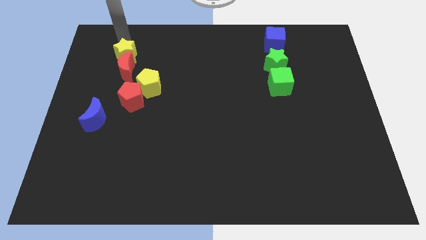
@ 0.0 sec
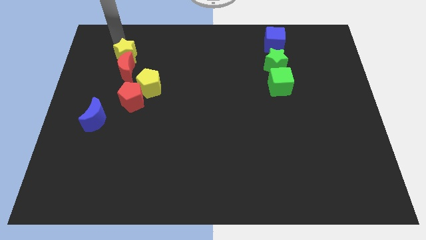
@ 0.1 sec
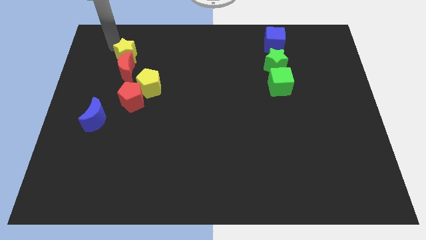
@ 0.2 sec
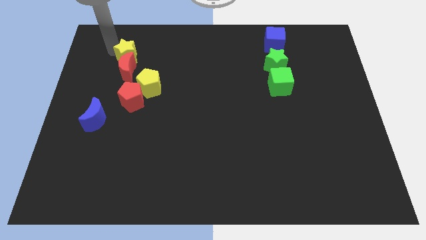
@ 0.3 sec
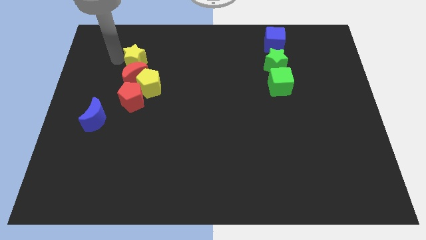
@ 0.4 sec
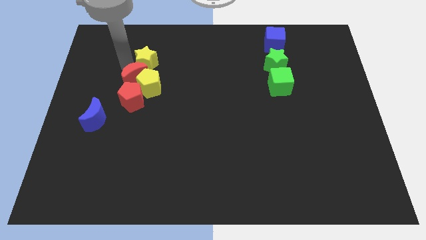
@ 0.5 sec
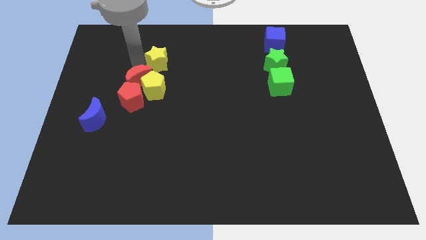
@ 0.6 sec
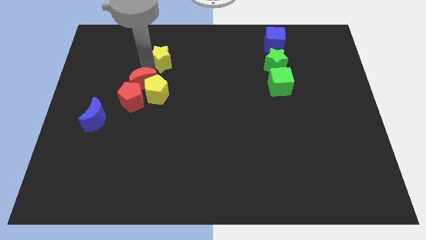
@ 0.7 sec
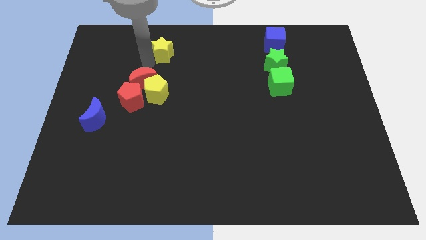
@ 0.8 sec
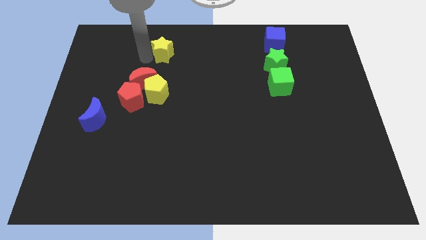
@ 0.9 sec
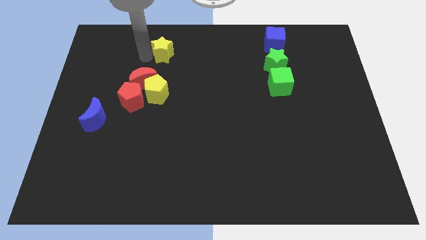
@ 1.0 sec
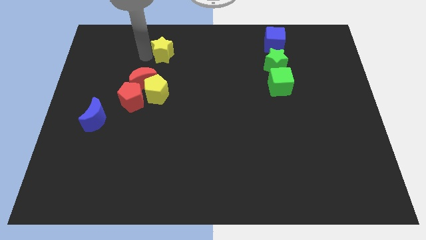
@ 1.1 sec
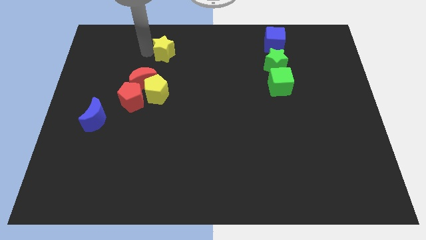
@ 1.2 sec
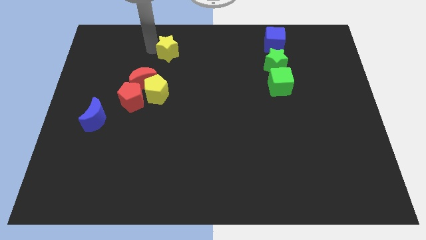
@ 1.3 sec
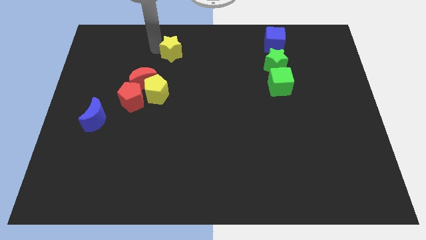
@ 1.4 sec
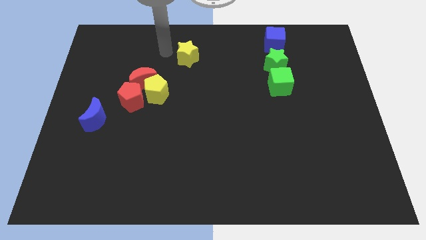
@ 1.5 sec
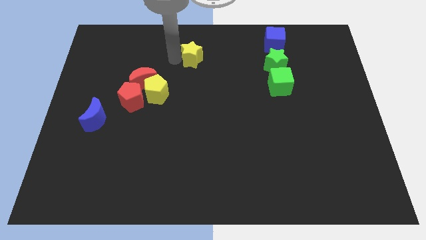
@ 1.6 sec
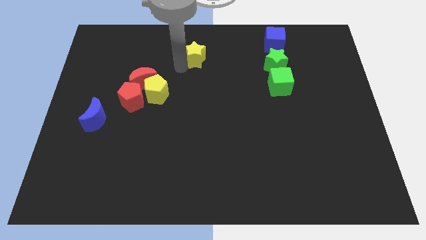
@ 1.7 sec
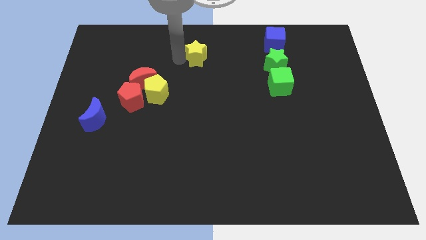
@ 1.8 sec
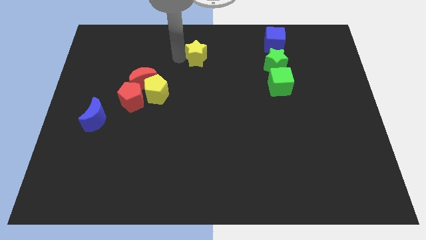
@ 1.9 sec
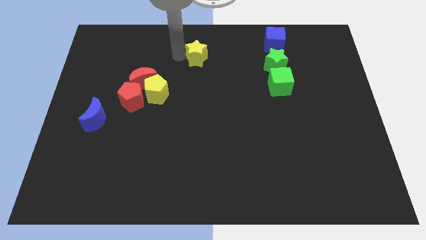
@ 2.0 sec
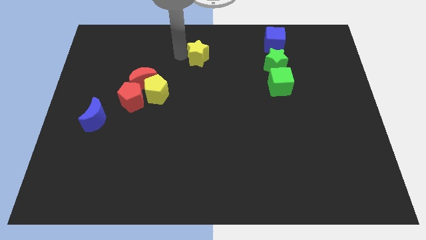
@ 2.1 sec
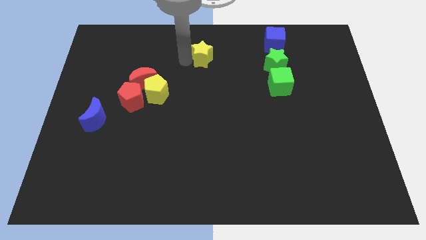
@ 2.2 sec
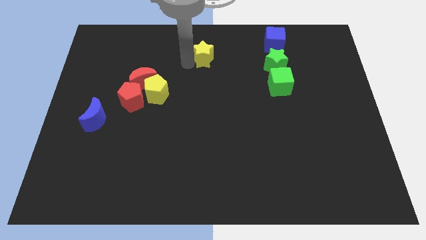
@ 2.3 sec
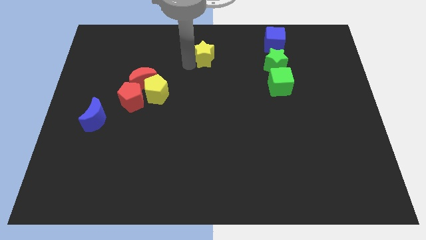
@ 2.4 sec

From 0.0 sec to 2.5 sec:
move the yellow star to the center of the board

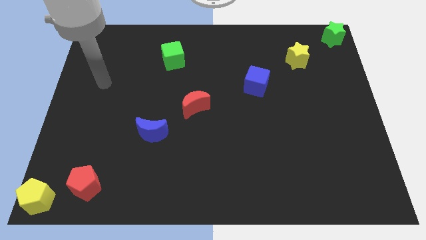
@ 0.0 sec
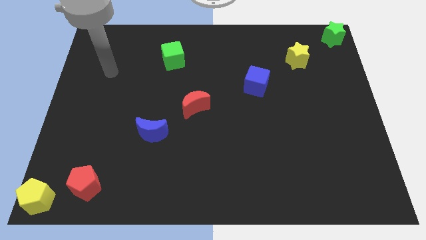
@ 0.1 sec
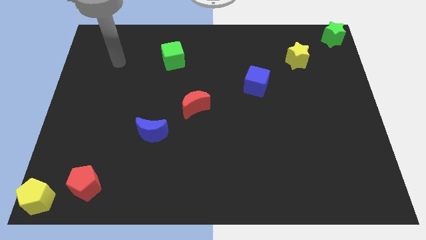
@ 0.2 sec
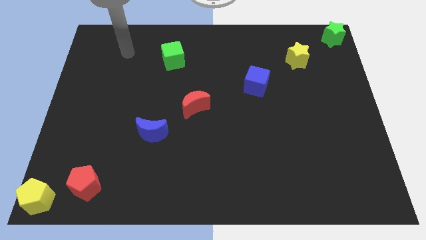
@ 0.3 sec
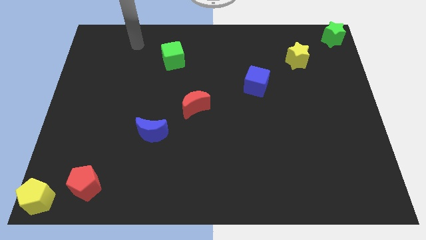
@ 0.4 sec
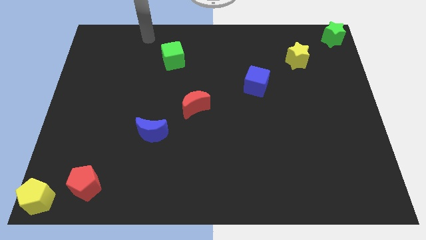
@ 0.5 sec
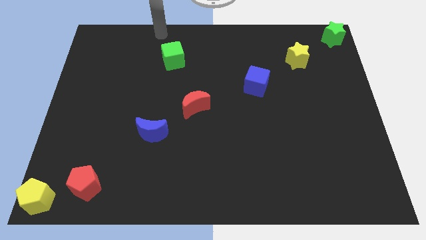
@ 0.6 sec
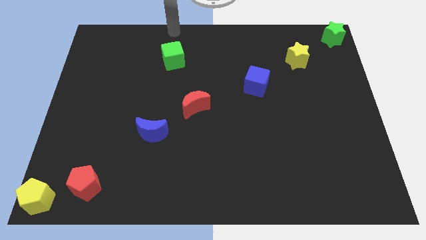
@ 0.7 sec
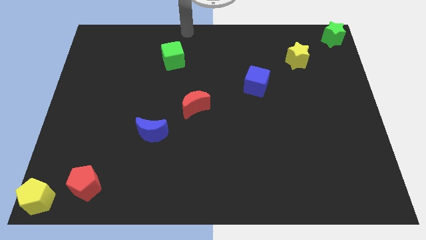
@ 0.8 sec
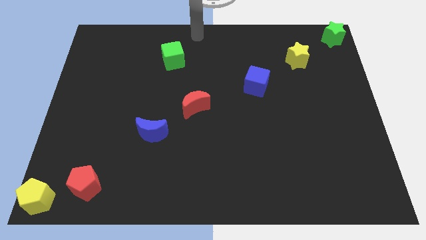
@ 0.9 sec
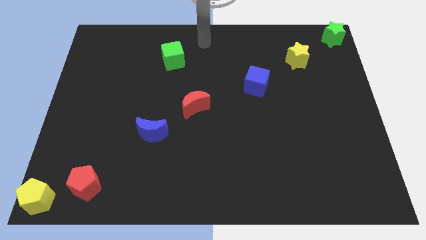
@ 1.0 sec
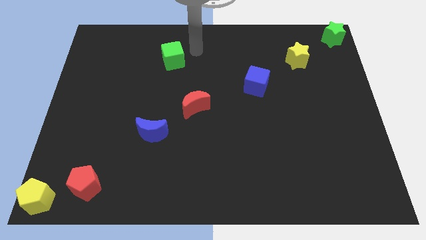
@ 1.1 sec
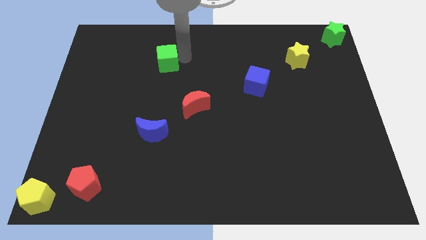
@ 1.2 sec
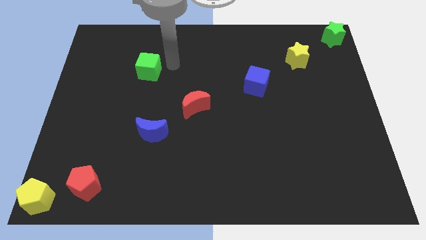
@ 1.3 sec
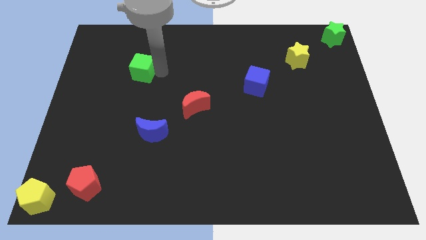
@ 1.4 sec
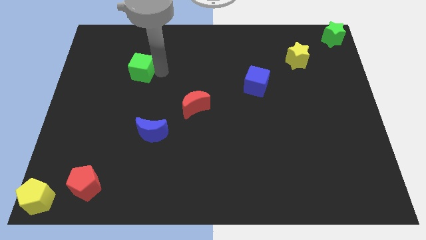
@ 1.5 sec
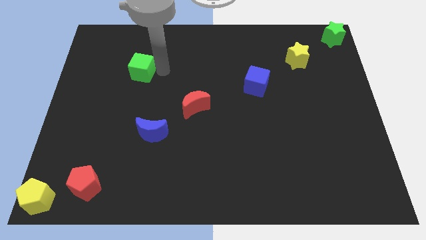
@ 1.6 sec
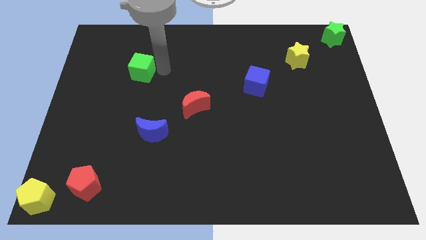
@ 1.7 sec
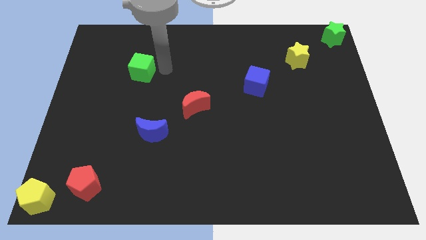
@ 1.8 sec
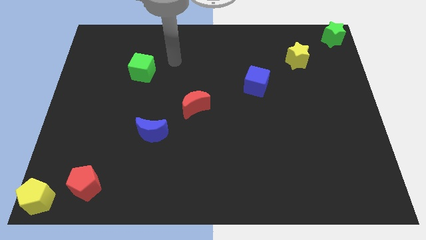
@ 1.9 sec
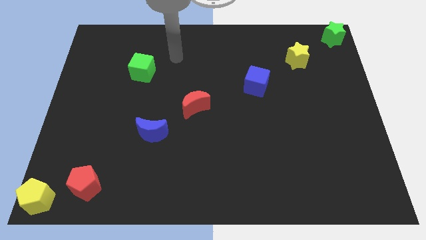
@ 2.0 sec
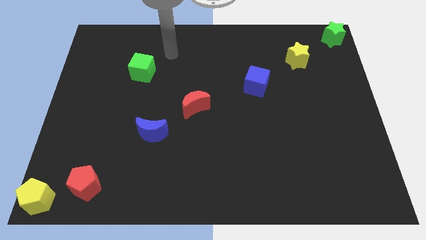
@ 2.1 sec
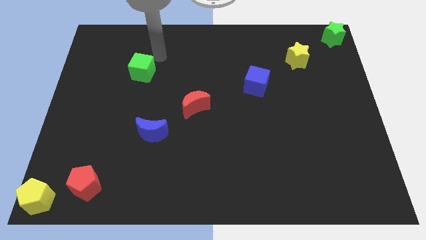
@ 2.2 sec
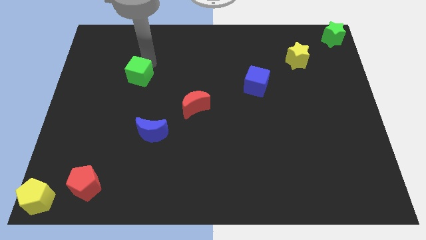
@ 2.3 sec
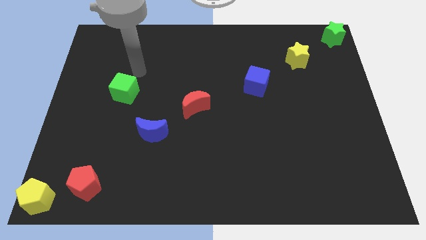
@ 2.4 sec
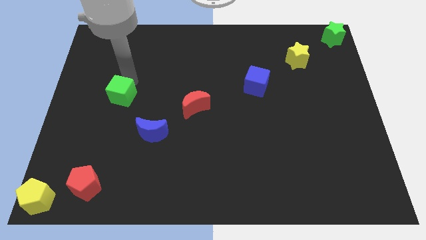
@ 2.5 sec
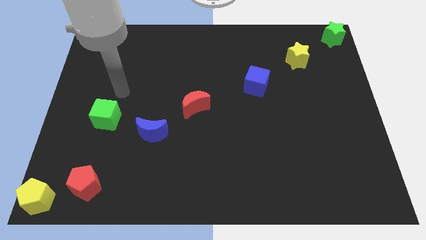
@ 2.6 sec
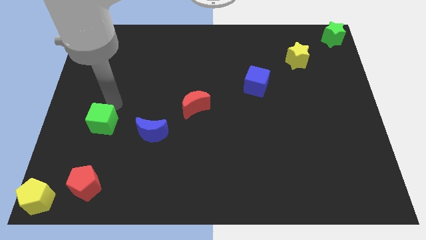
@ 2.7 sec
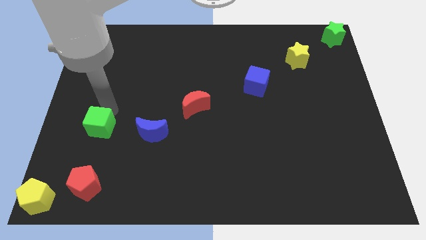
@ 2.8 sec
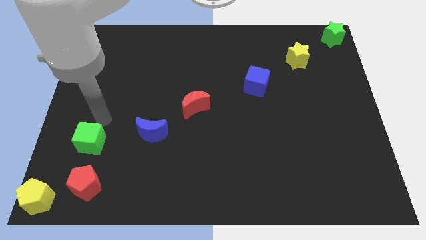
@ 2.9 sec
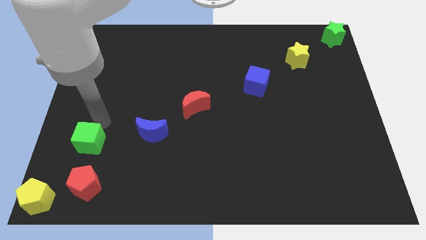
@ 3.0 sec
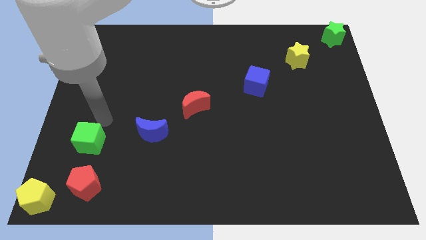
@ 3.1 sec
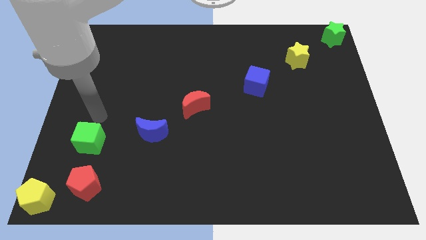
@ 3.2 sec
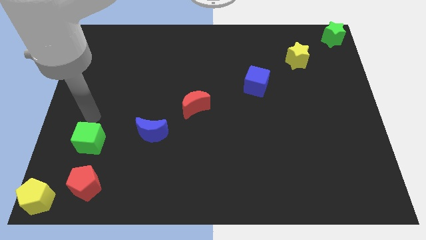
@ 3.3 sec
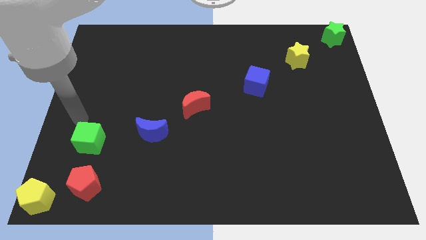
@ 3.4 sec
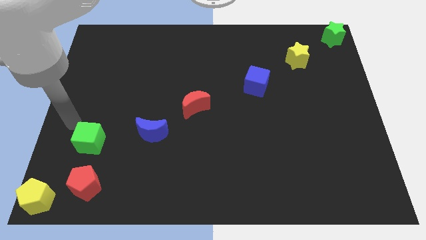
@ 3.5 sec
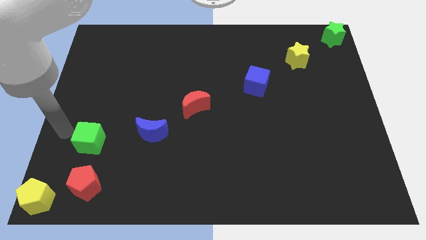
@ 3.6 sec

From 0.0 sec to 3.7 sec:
place the green cube vertically above the red pentagon

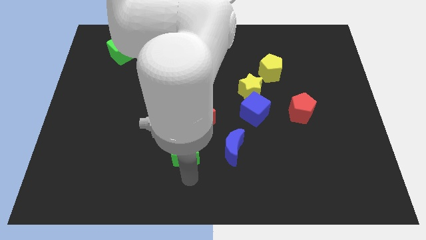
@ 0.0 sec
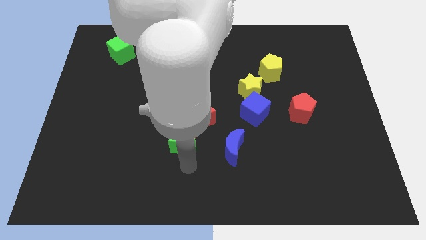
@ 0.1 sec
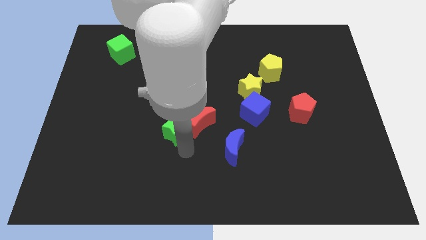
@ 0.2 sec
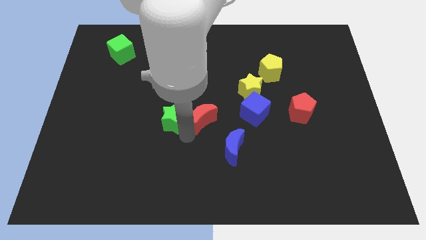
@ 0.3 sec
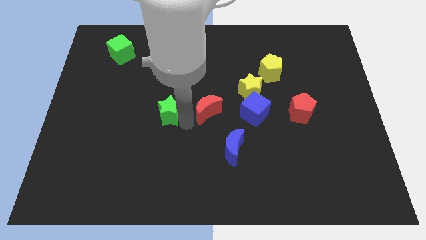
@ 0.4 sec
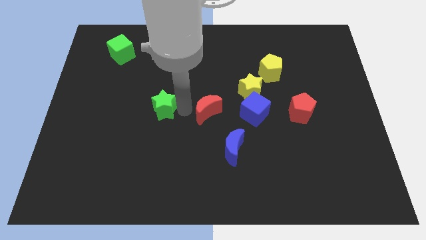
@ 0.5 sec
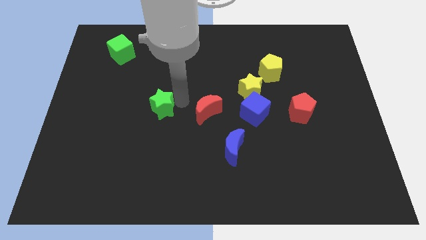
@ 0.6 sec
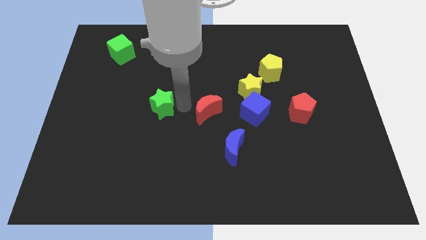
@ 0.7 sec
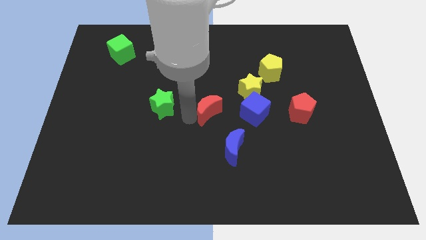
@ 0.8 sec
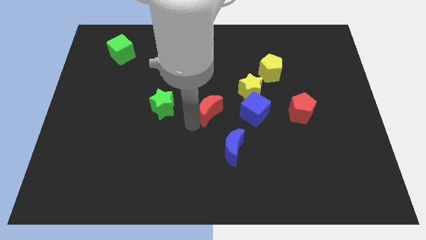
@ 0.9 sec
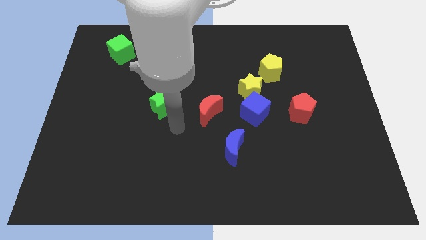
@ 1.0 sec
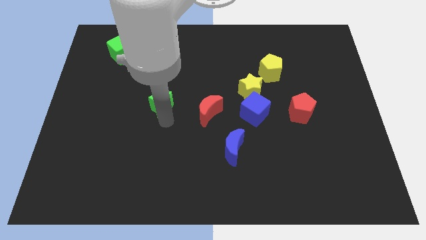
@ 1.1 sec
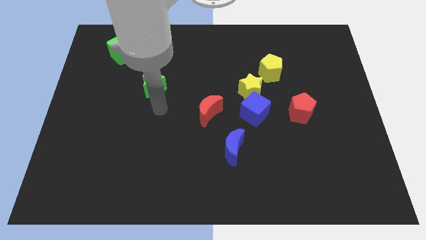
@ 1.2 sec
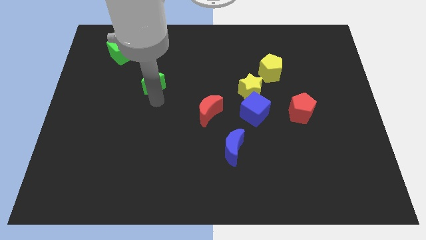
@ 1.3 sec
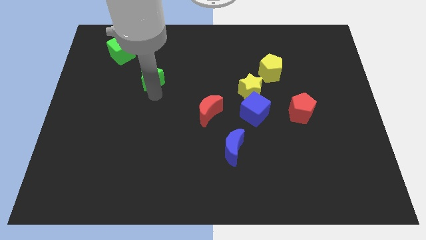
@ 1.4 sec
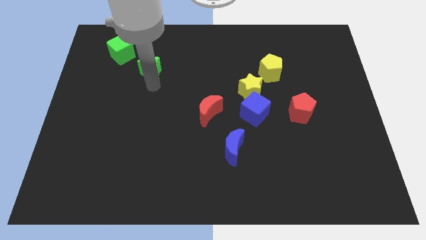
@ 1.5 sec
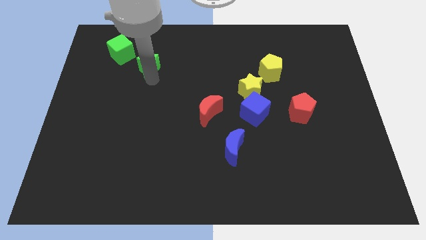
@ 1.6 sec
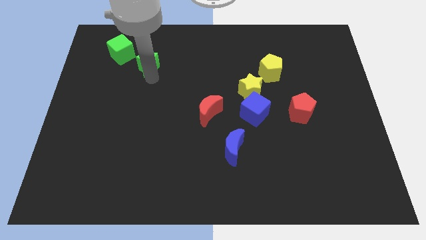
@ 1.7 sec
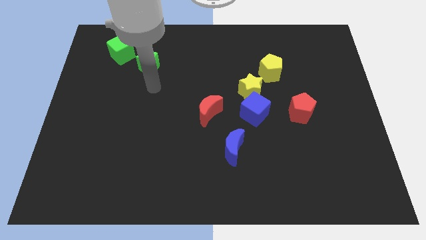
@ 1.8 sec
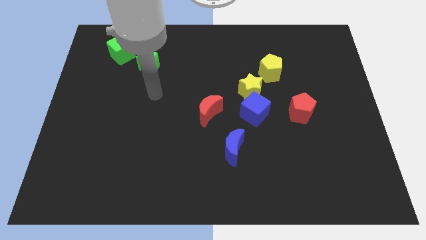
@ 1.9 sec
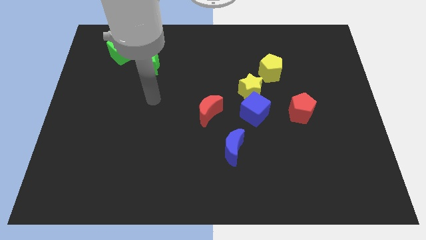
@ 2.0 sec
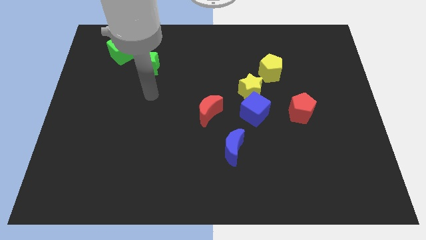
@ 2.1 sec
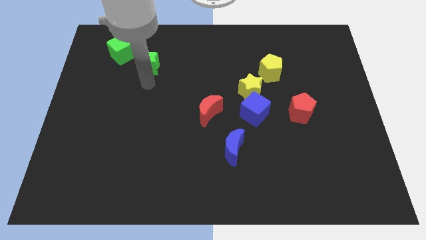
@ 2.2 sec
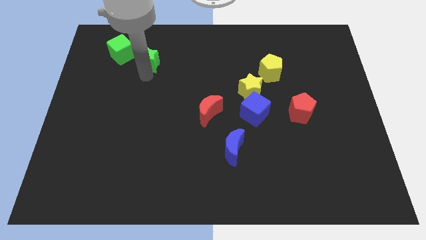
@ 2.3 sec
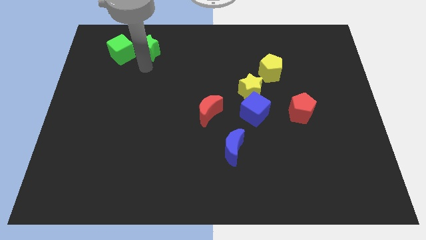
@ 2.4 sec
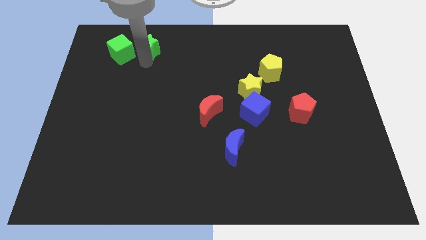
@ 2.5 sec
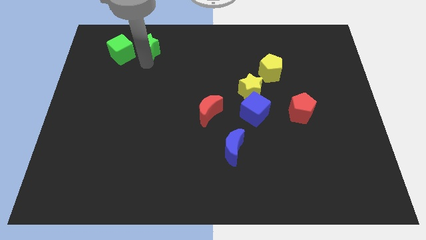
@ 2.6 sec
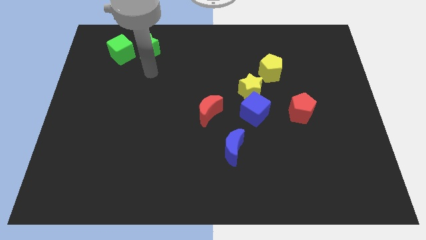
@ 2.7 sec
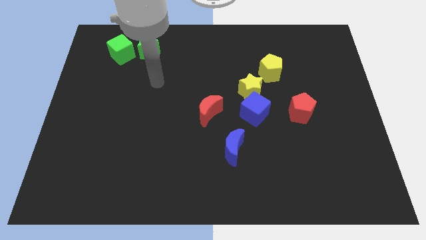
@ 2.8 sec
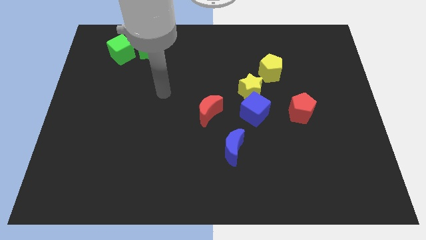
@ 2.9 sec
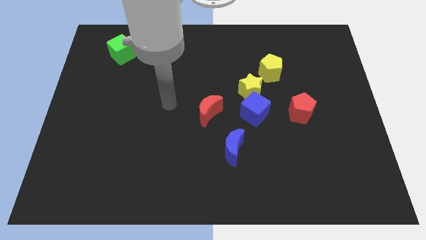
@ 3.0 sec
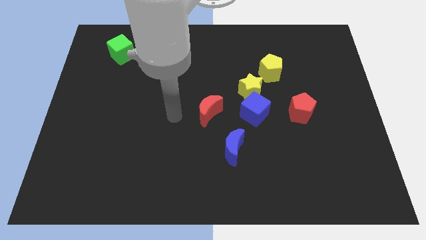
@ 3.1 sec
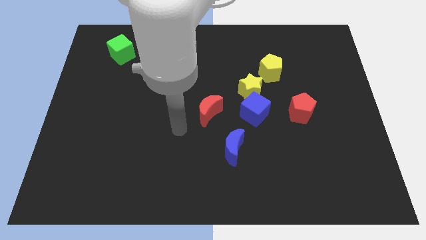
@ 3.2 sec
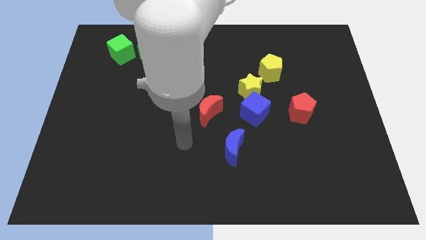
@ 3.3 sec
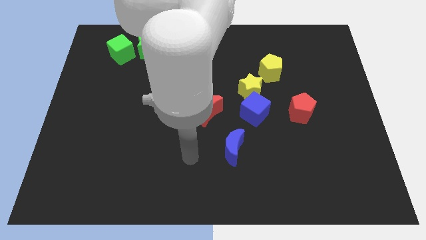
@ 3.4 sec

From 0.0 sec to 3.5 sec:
place the green star beside the green cube
